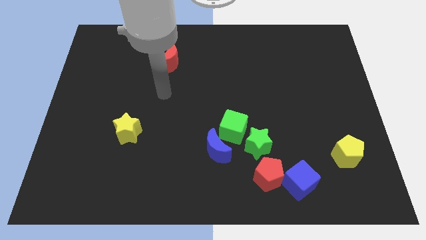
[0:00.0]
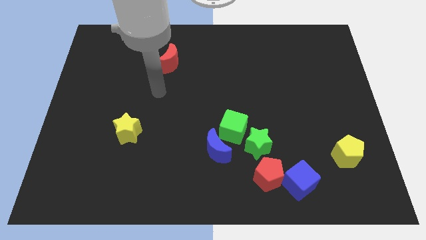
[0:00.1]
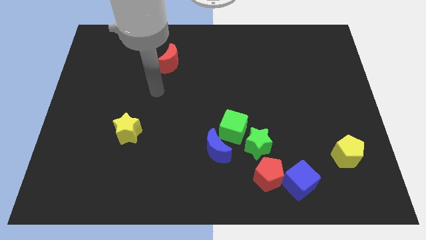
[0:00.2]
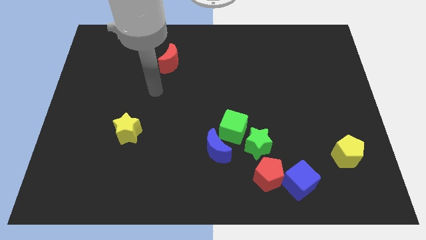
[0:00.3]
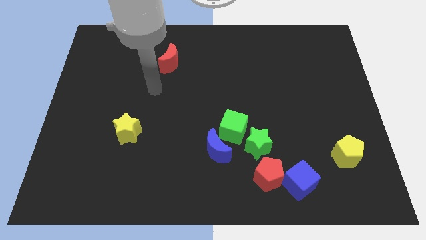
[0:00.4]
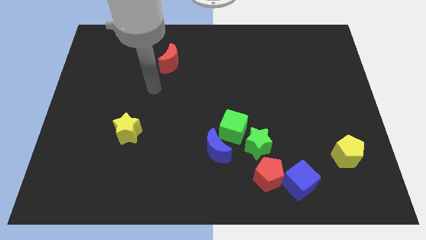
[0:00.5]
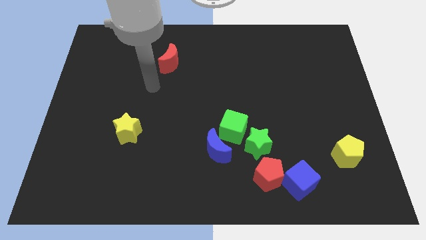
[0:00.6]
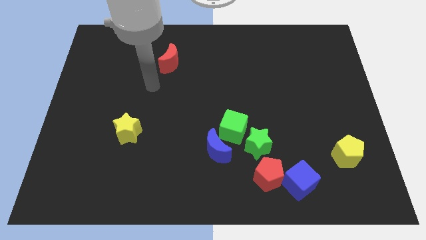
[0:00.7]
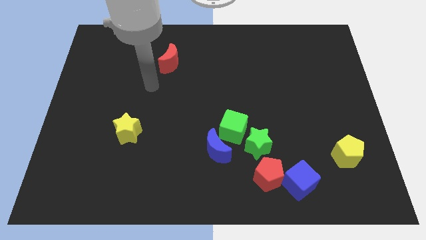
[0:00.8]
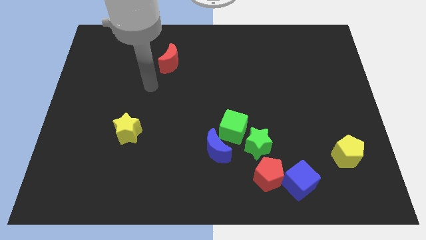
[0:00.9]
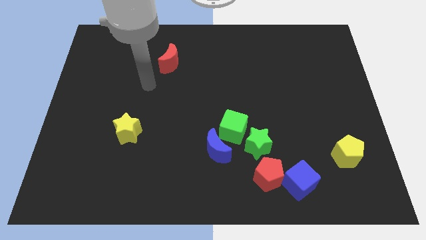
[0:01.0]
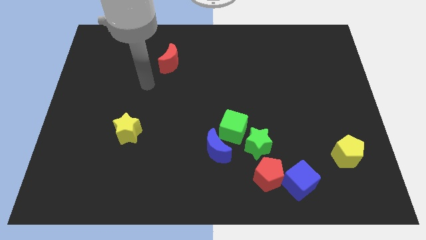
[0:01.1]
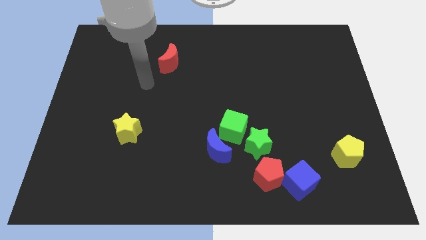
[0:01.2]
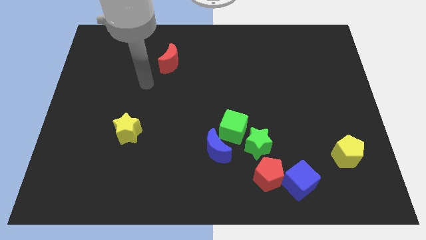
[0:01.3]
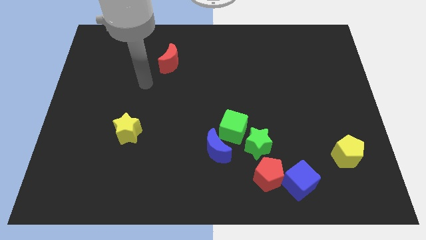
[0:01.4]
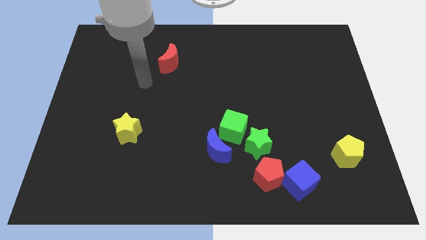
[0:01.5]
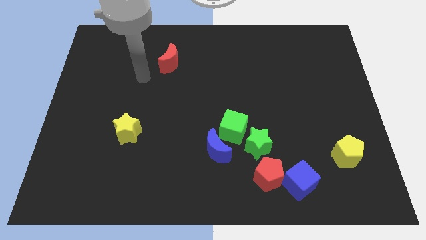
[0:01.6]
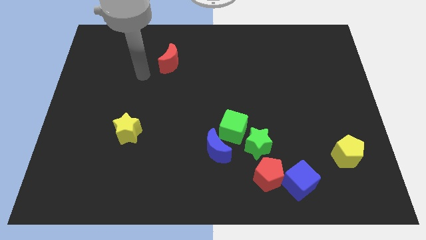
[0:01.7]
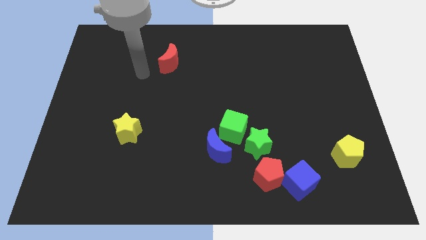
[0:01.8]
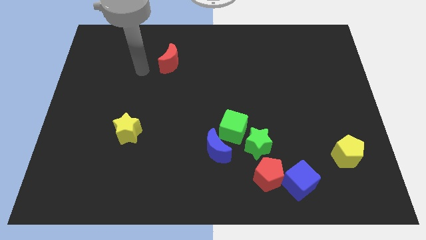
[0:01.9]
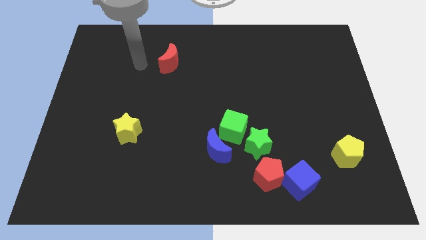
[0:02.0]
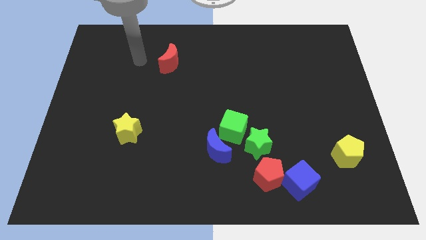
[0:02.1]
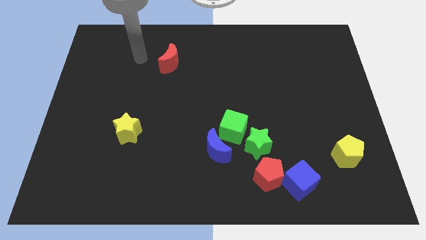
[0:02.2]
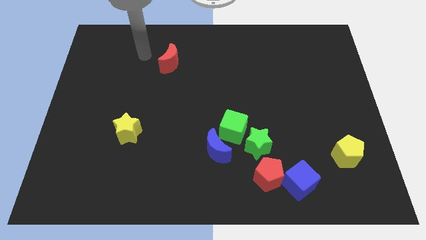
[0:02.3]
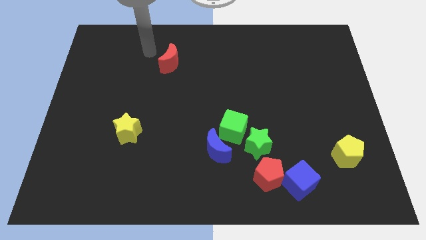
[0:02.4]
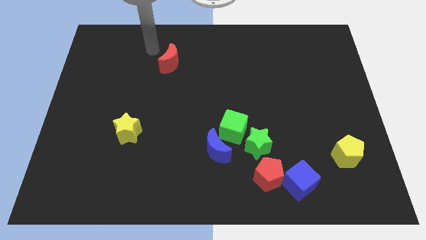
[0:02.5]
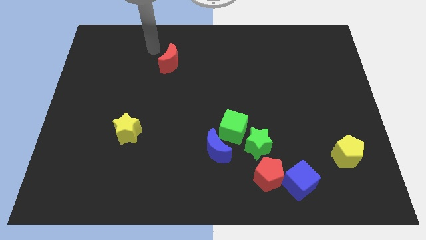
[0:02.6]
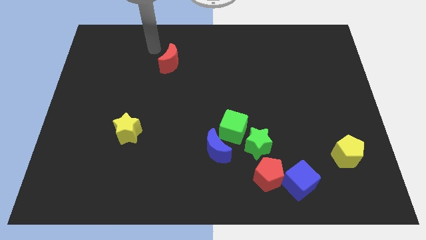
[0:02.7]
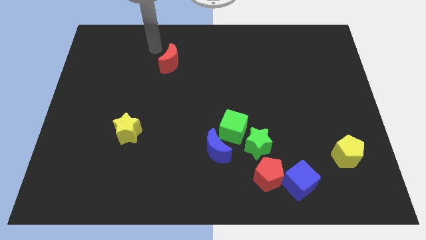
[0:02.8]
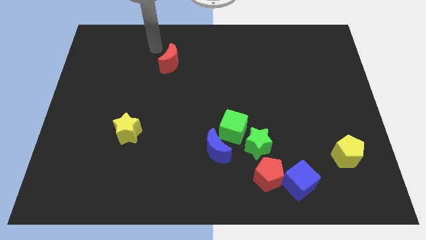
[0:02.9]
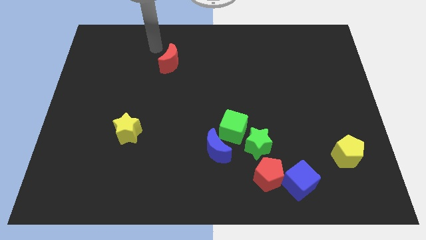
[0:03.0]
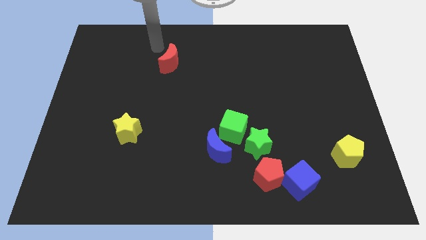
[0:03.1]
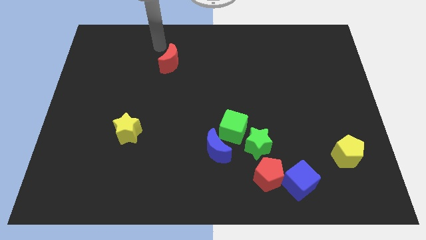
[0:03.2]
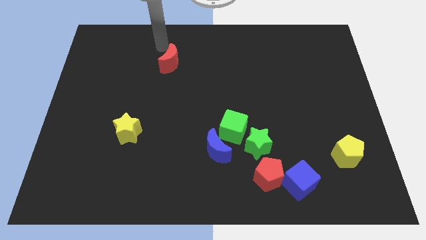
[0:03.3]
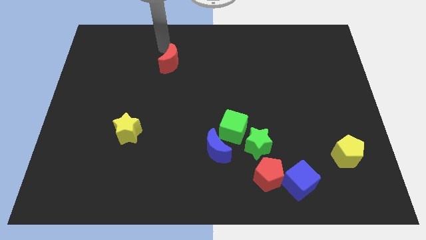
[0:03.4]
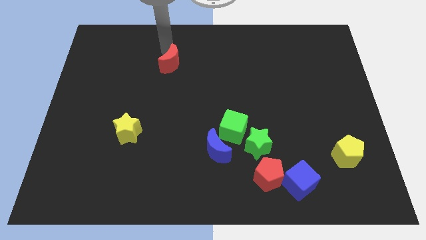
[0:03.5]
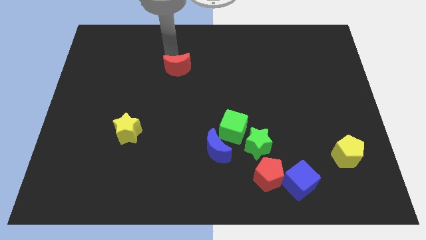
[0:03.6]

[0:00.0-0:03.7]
slightly touch the top of the red crescent

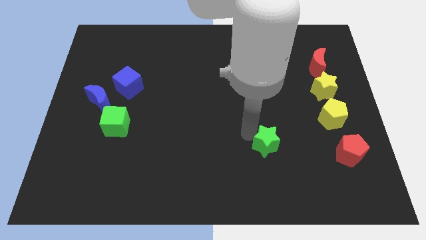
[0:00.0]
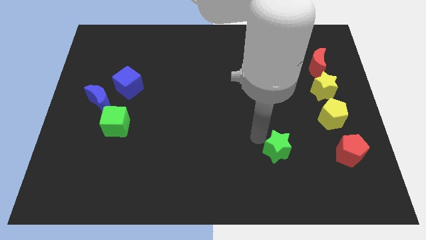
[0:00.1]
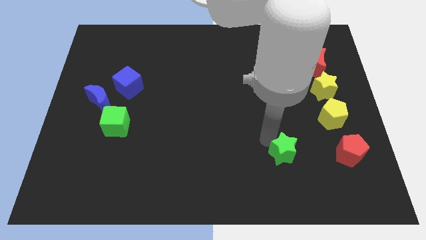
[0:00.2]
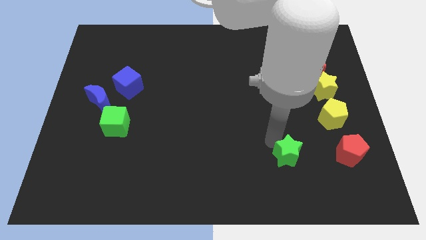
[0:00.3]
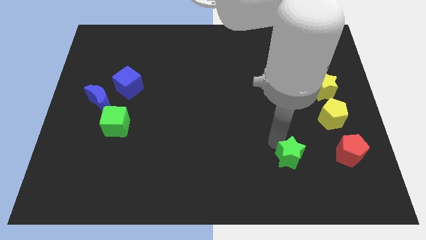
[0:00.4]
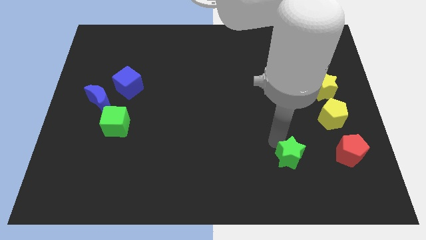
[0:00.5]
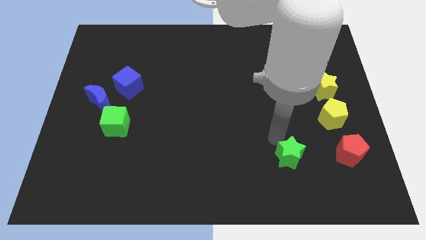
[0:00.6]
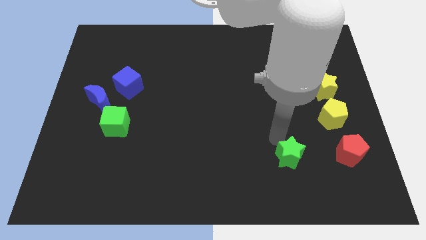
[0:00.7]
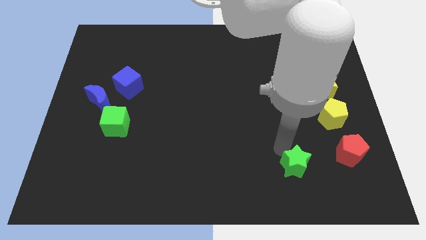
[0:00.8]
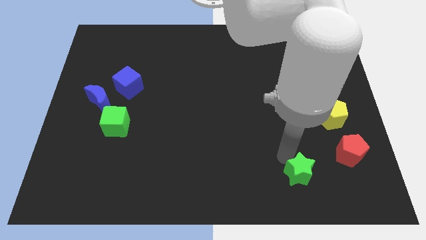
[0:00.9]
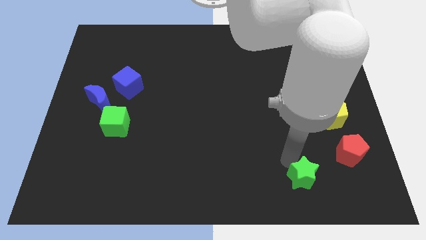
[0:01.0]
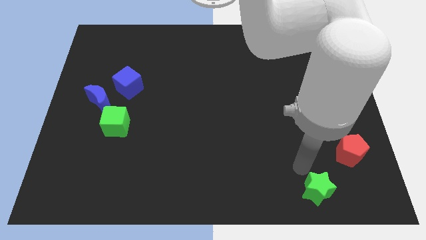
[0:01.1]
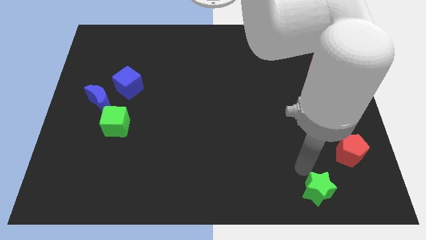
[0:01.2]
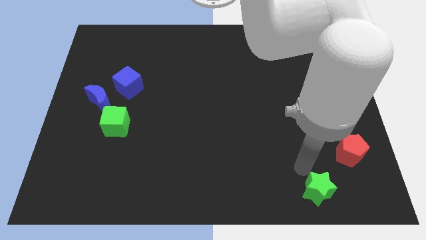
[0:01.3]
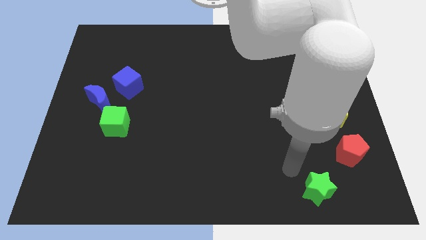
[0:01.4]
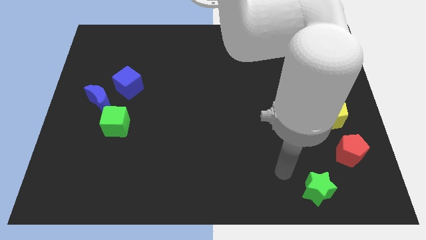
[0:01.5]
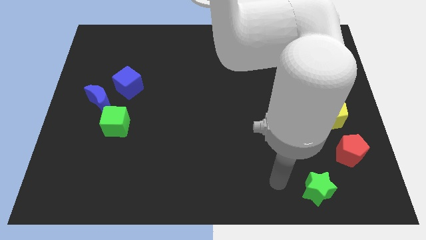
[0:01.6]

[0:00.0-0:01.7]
move the green star to the downwards

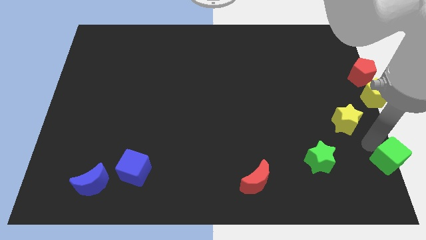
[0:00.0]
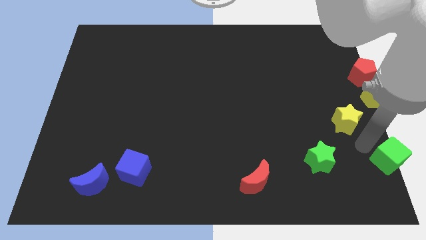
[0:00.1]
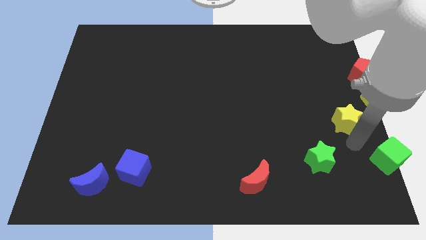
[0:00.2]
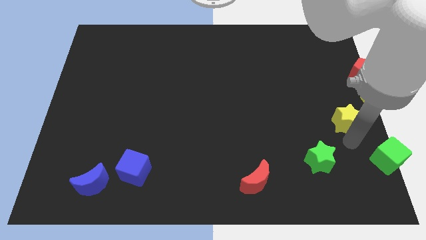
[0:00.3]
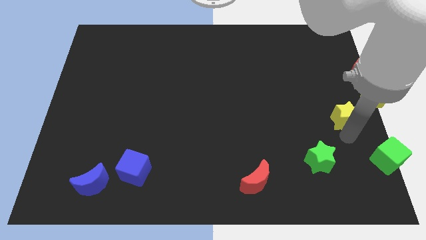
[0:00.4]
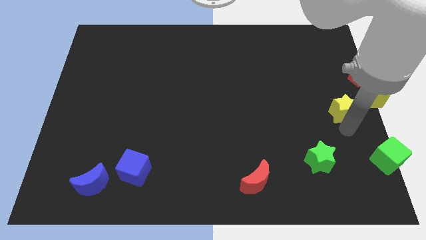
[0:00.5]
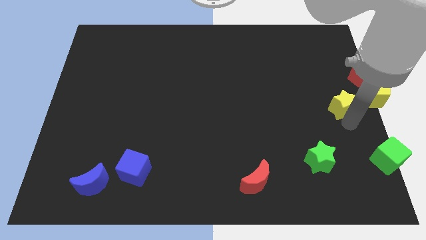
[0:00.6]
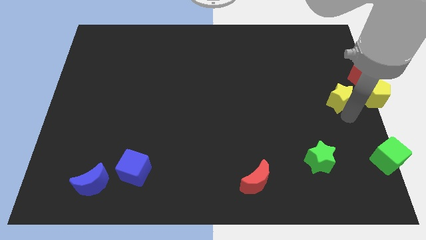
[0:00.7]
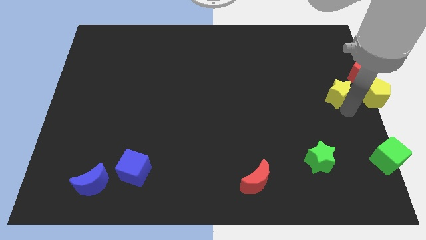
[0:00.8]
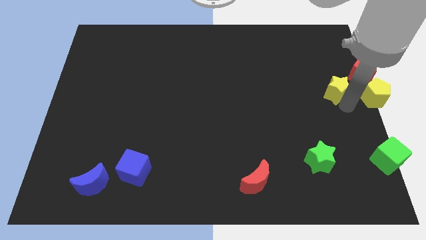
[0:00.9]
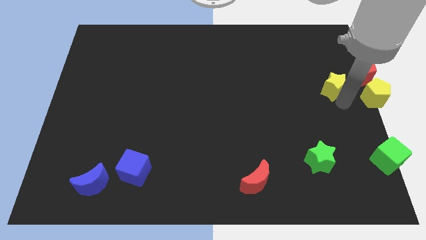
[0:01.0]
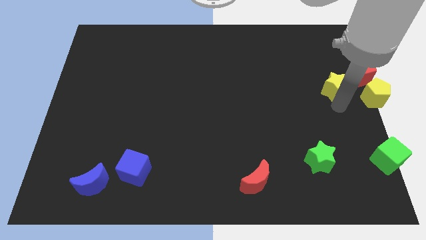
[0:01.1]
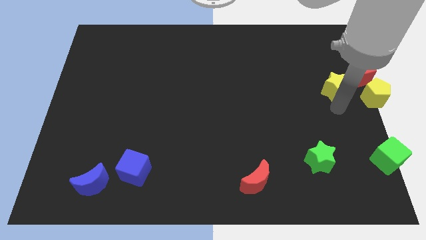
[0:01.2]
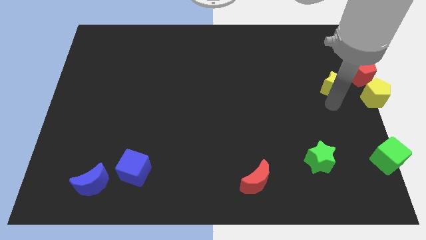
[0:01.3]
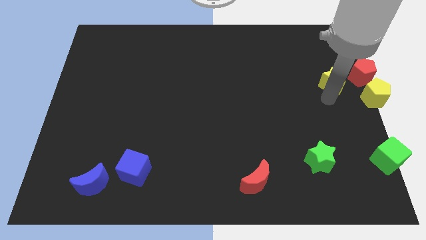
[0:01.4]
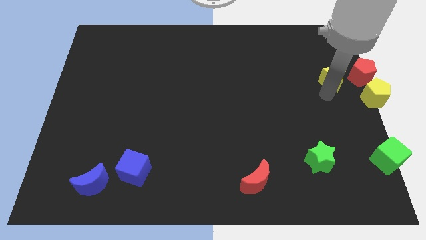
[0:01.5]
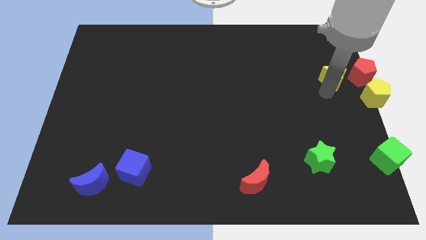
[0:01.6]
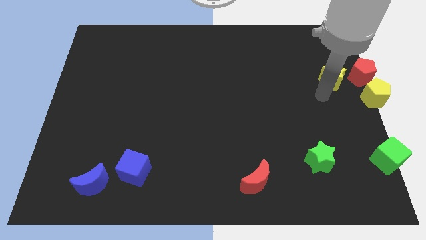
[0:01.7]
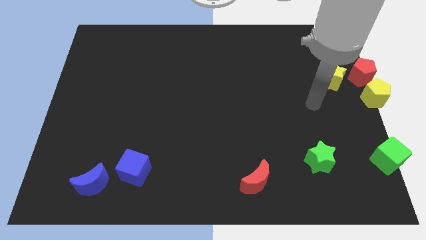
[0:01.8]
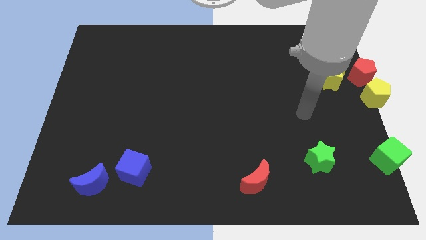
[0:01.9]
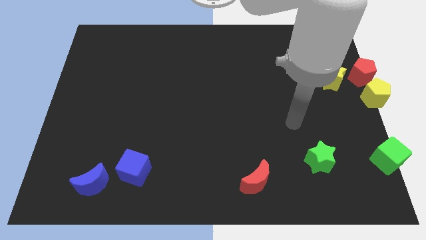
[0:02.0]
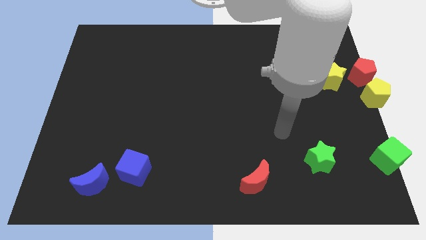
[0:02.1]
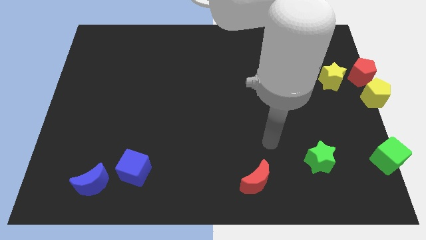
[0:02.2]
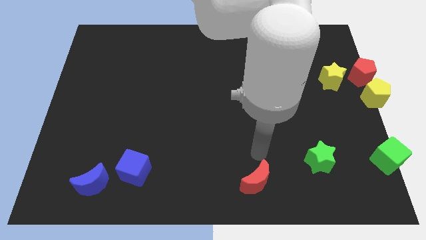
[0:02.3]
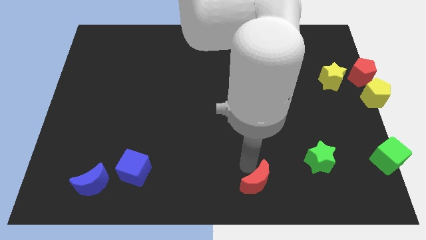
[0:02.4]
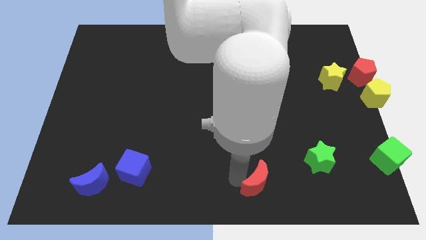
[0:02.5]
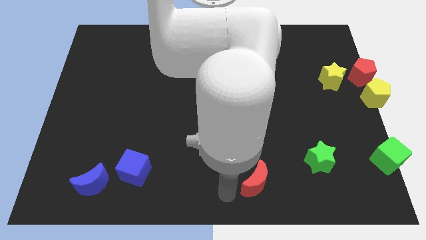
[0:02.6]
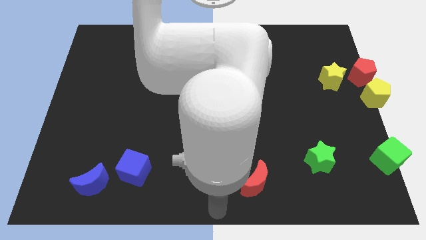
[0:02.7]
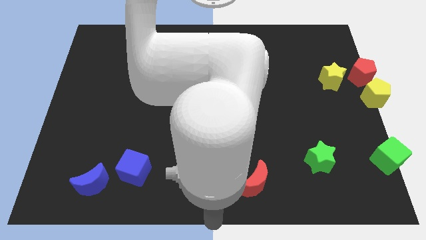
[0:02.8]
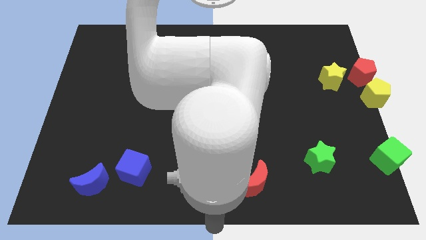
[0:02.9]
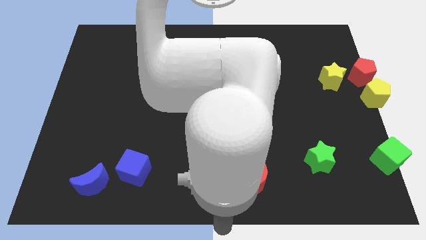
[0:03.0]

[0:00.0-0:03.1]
move yellow star to the left side of the red pentagon

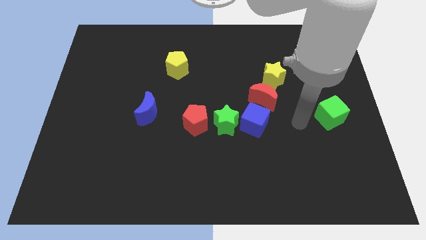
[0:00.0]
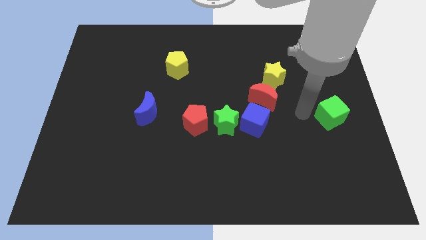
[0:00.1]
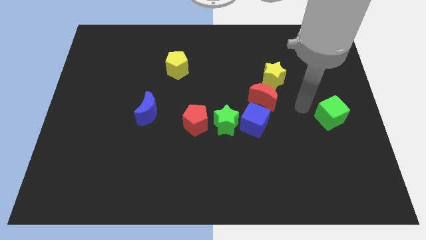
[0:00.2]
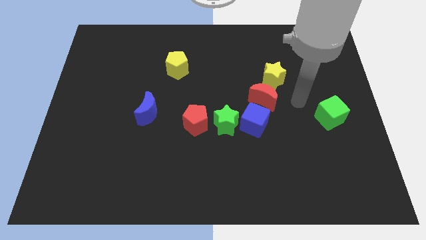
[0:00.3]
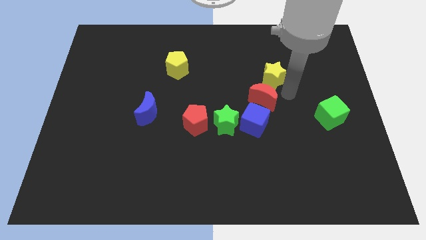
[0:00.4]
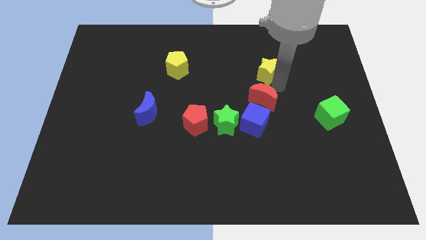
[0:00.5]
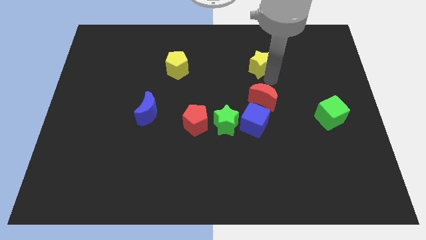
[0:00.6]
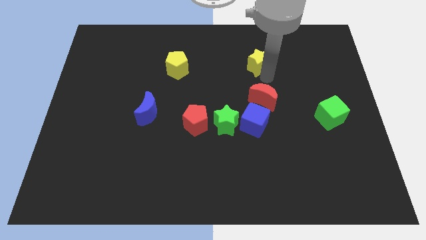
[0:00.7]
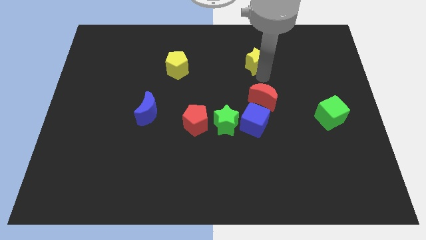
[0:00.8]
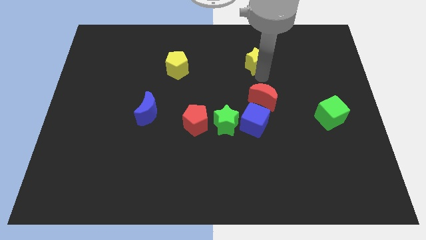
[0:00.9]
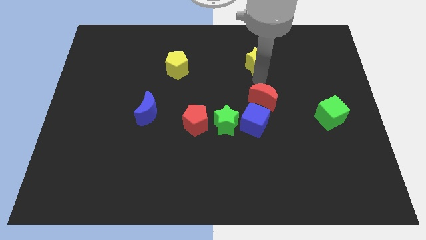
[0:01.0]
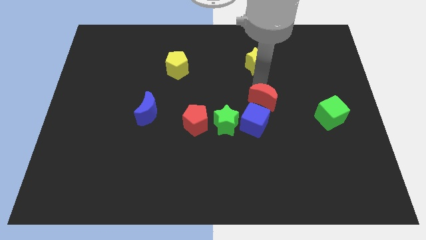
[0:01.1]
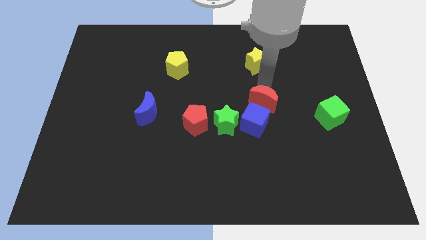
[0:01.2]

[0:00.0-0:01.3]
move the yellow star horizontally to the right of the yellow pentagon
